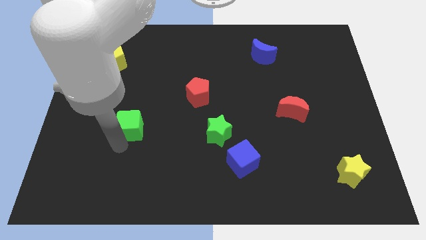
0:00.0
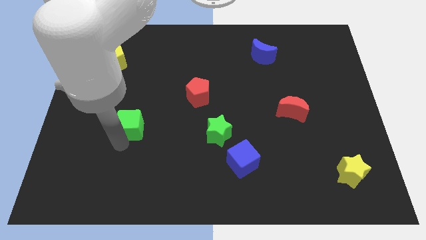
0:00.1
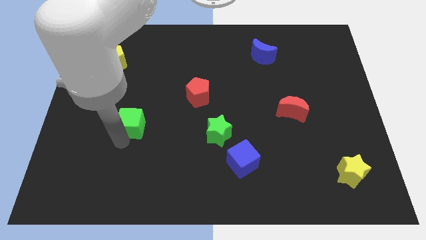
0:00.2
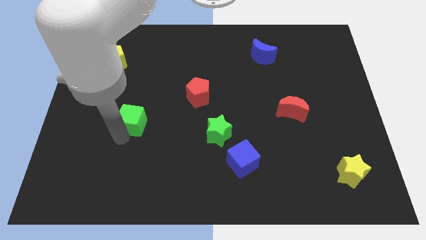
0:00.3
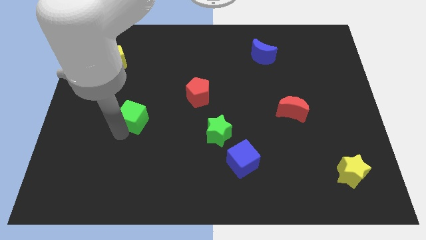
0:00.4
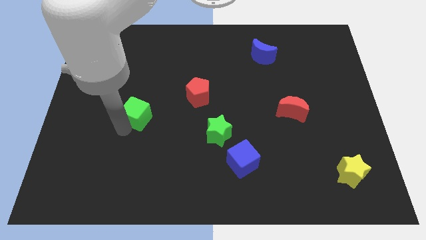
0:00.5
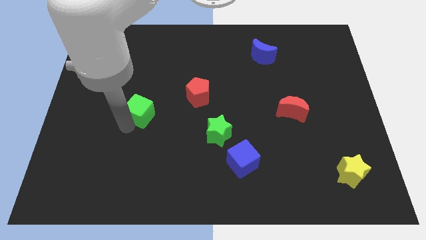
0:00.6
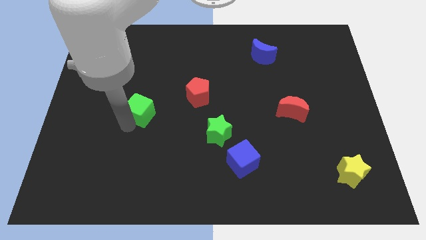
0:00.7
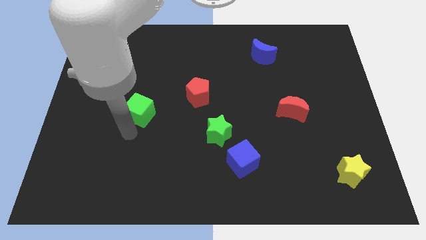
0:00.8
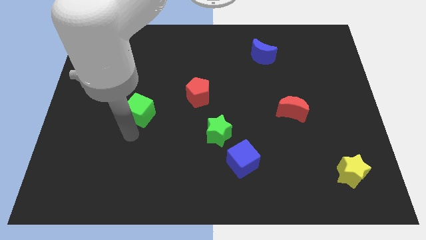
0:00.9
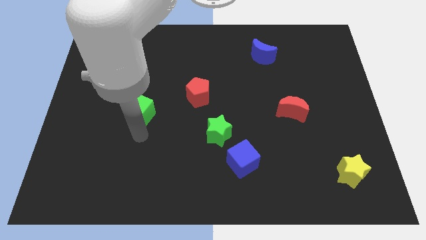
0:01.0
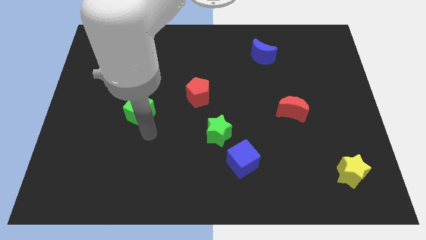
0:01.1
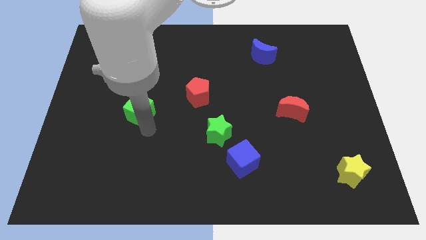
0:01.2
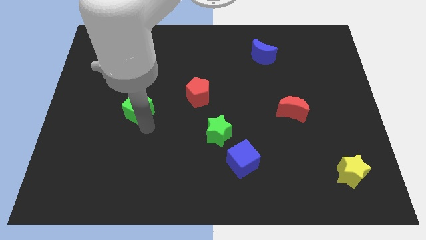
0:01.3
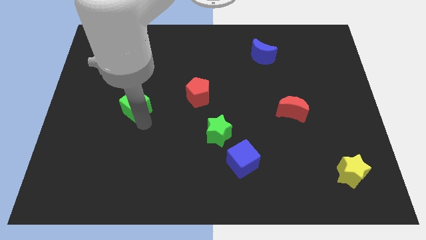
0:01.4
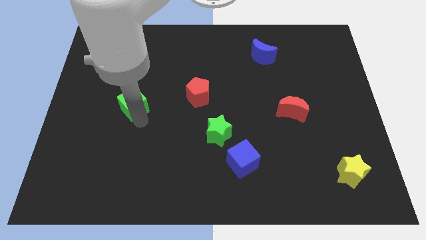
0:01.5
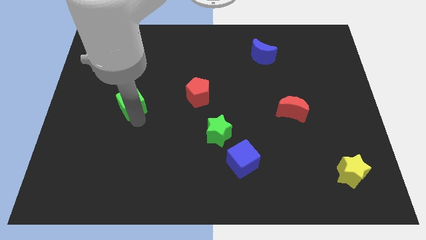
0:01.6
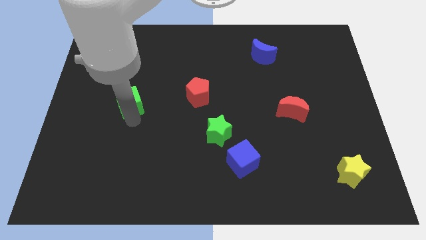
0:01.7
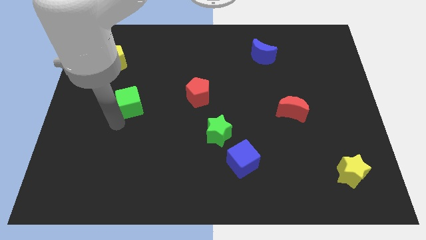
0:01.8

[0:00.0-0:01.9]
push the green cube to the left side of the red pentagon

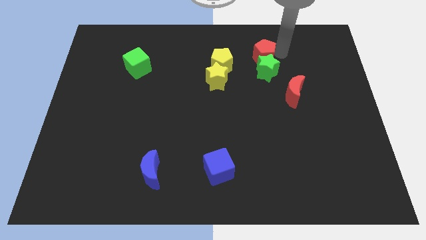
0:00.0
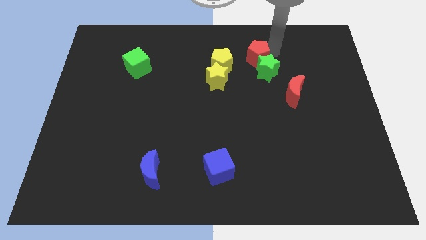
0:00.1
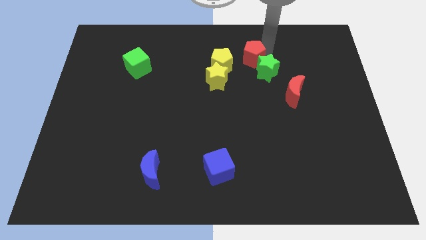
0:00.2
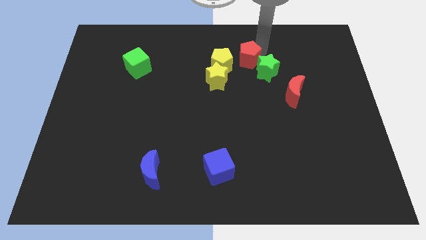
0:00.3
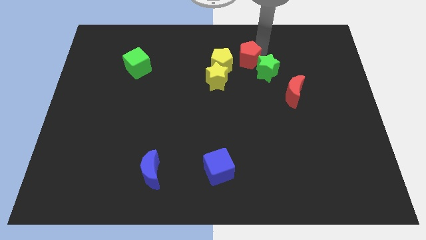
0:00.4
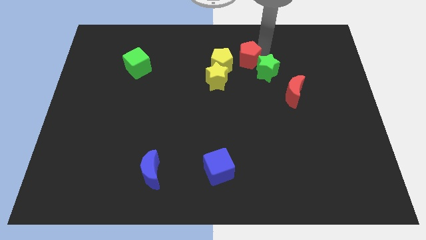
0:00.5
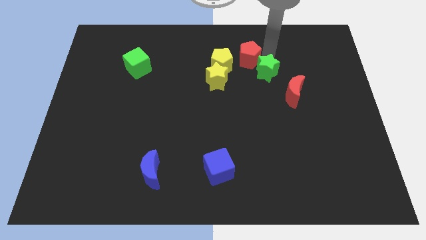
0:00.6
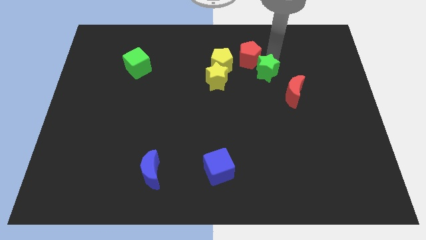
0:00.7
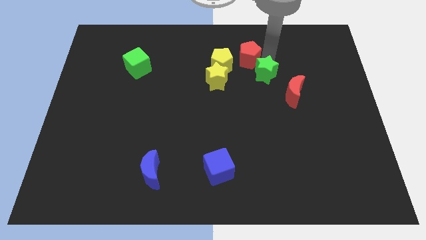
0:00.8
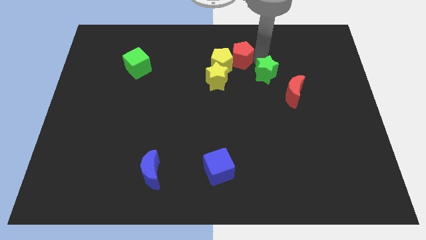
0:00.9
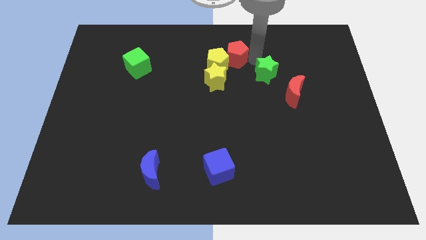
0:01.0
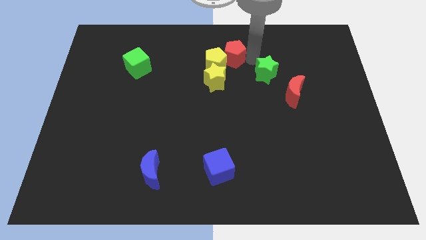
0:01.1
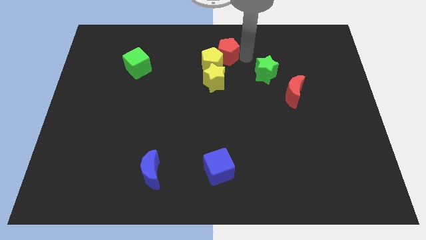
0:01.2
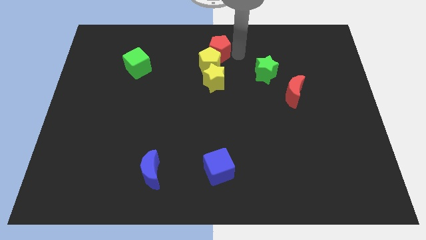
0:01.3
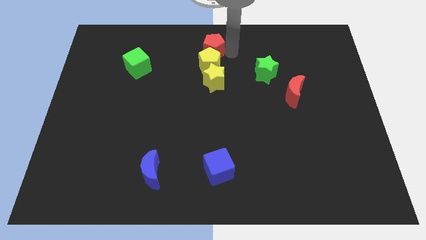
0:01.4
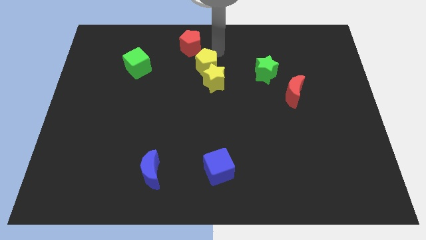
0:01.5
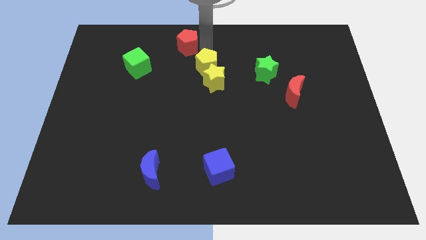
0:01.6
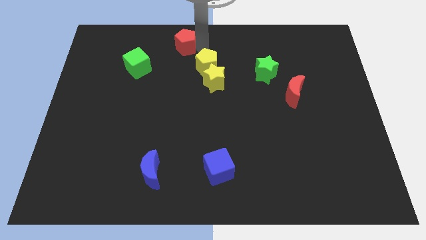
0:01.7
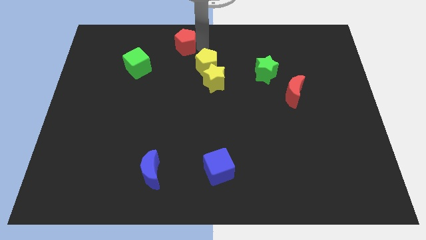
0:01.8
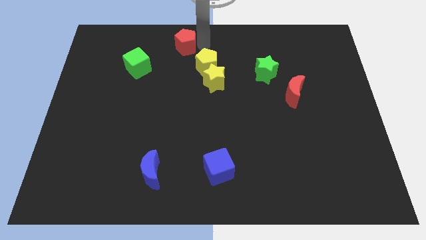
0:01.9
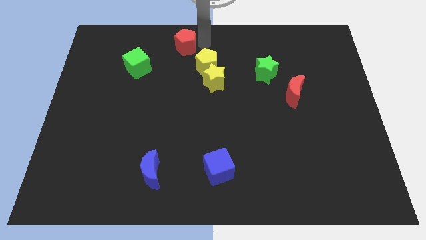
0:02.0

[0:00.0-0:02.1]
push the red pentagon to the top of the yellow pentagon

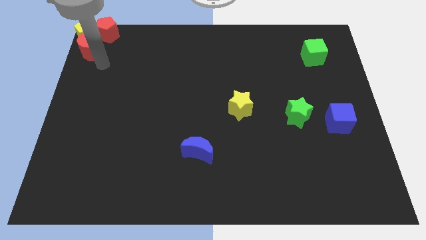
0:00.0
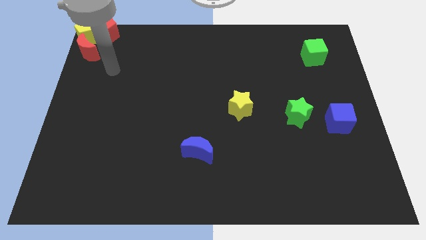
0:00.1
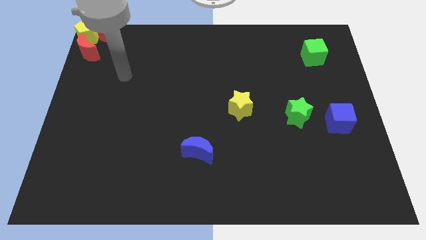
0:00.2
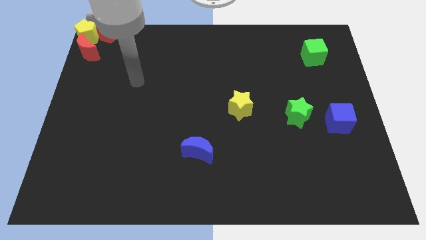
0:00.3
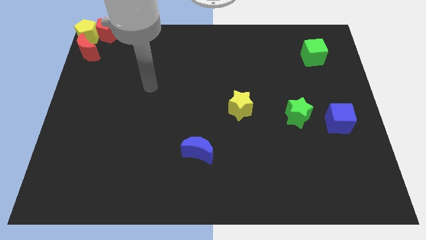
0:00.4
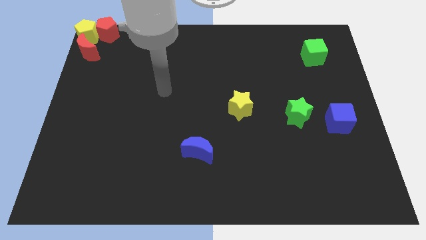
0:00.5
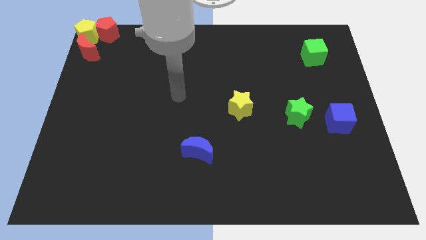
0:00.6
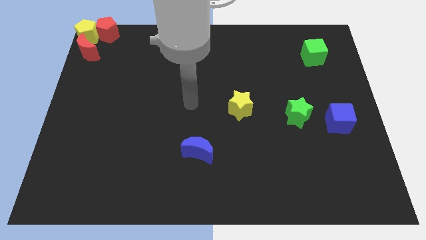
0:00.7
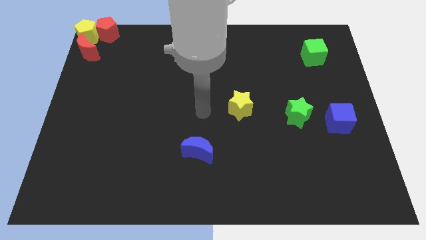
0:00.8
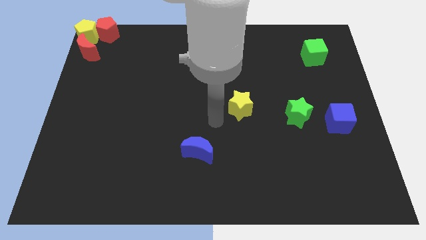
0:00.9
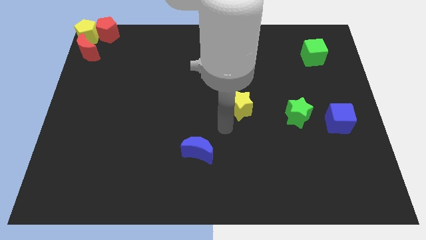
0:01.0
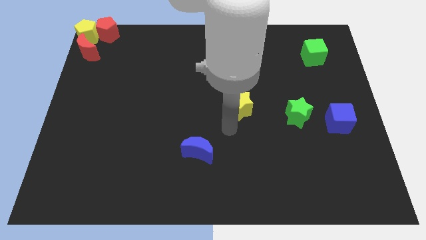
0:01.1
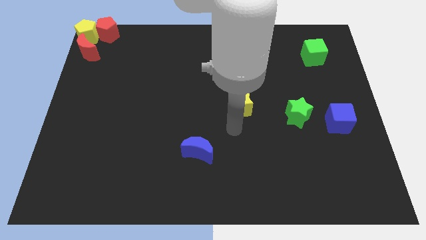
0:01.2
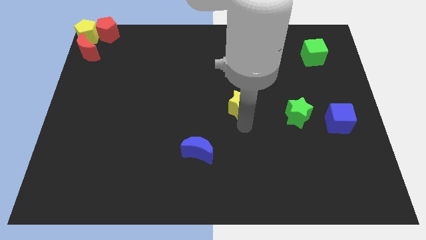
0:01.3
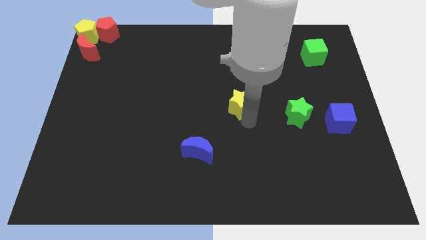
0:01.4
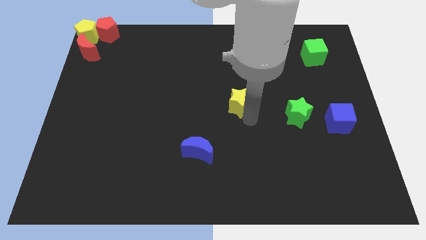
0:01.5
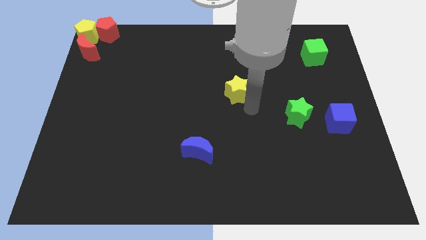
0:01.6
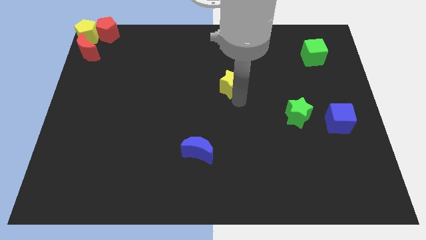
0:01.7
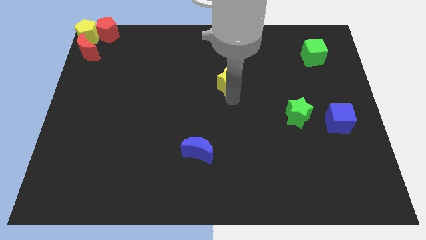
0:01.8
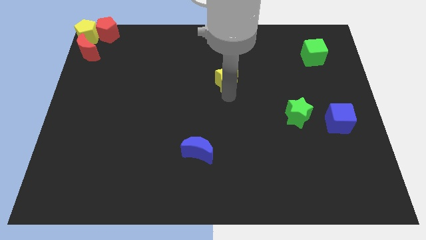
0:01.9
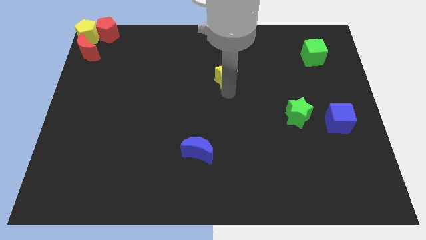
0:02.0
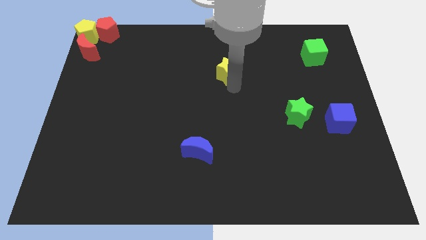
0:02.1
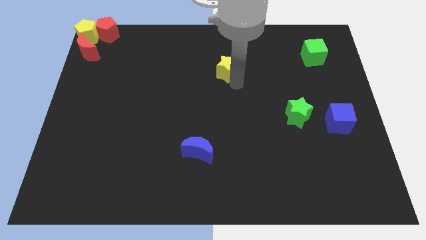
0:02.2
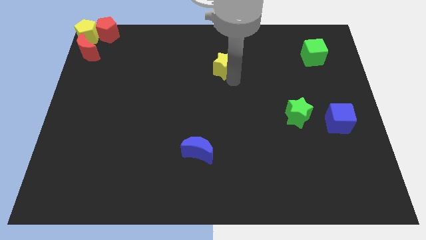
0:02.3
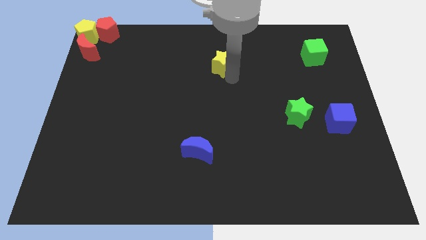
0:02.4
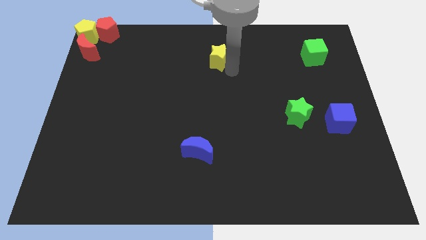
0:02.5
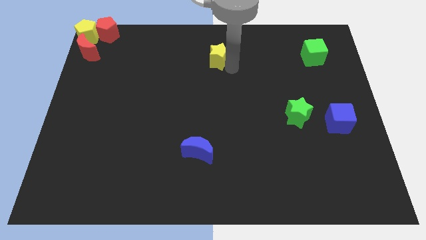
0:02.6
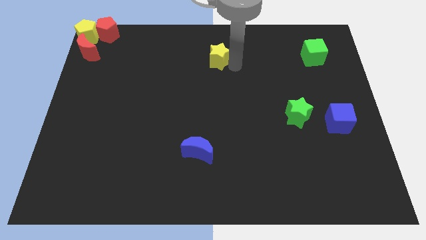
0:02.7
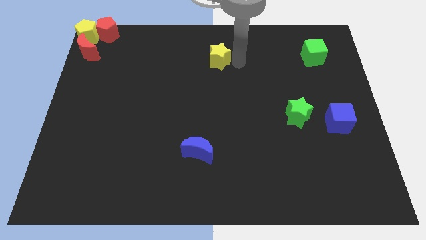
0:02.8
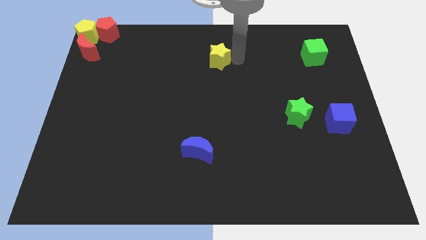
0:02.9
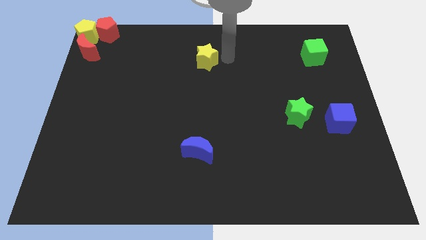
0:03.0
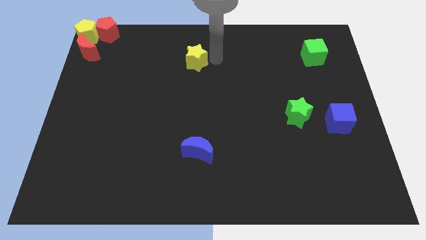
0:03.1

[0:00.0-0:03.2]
push the yellow star to the top of the blue crescent

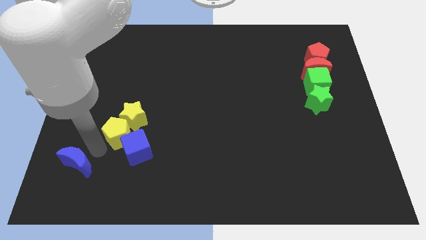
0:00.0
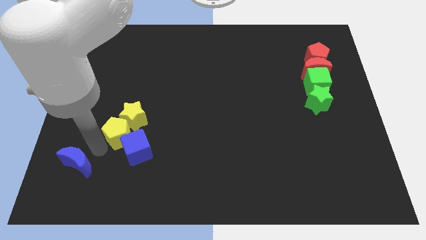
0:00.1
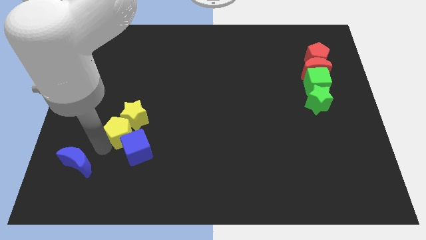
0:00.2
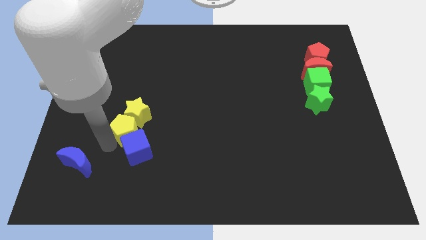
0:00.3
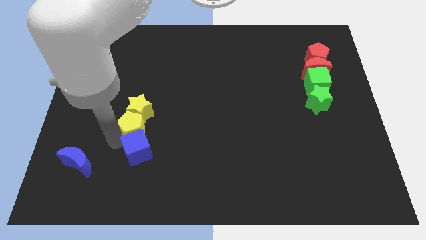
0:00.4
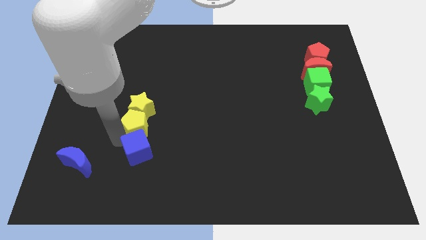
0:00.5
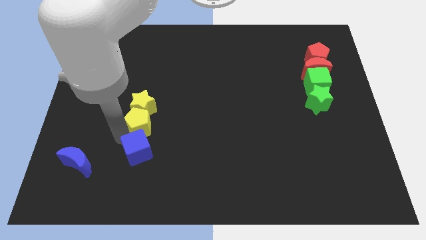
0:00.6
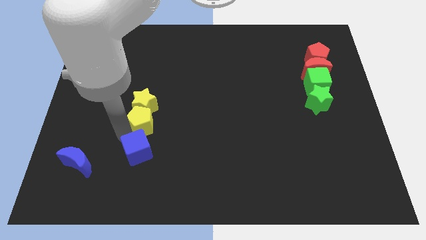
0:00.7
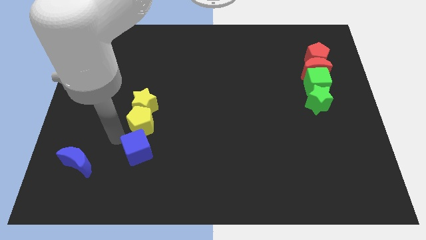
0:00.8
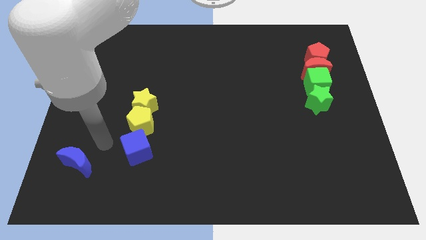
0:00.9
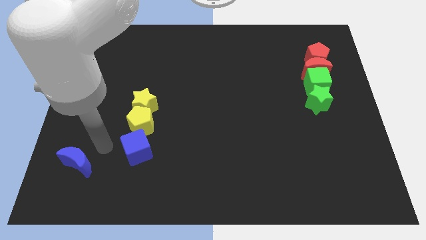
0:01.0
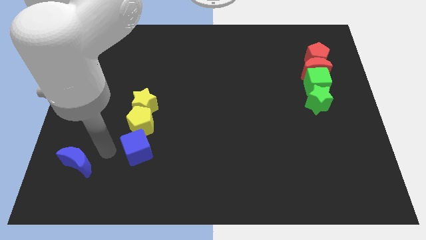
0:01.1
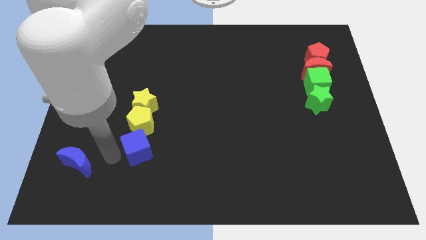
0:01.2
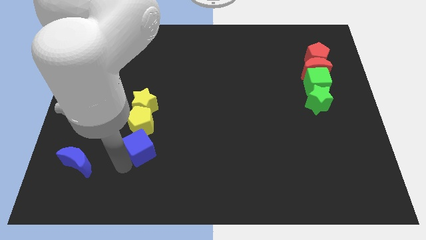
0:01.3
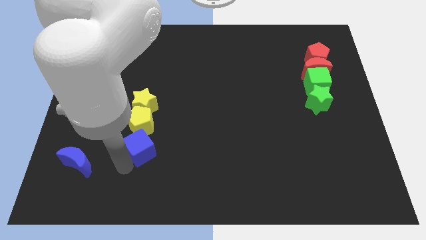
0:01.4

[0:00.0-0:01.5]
move the yellow blocks above the blue cube

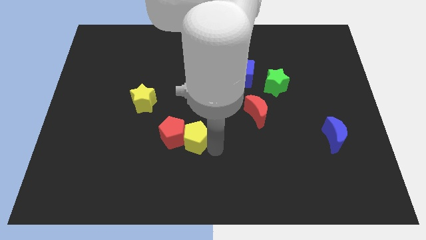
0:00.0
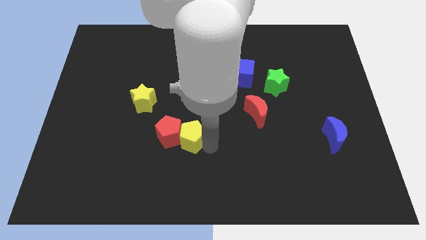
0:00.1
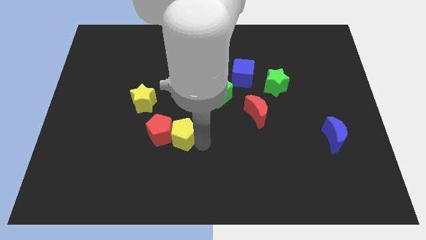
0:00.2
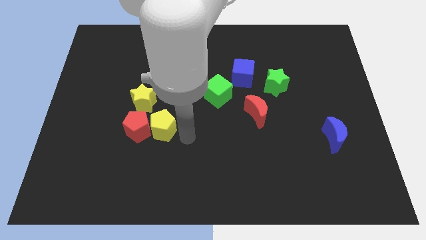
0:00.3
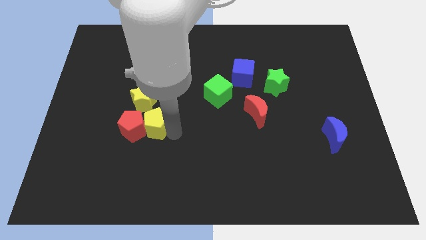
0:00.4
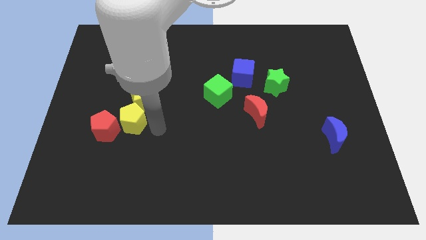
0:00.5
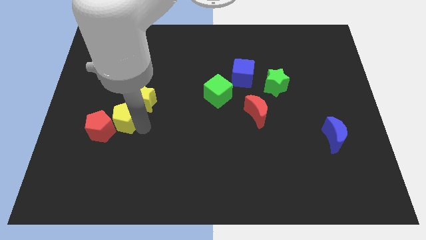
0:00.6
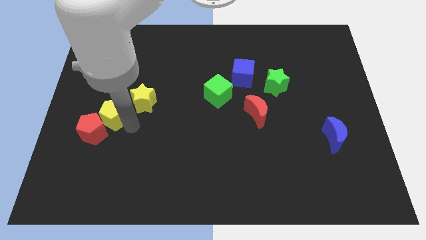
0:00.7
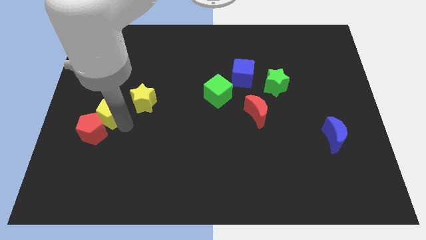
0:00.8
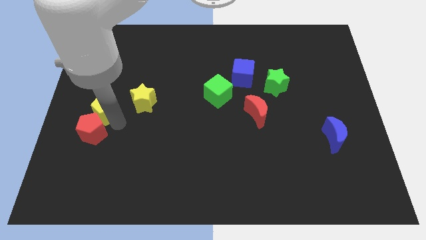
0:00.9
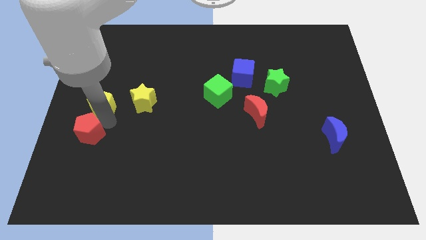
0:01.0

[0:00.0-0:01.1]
push the pentagons towards the left side of the board
